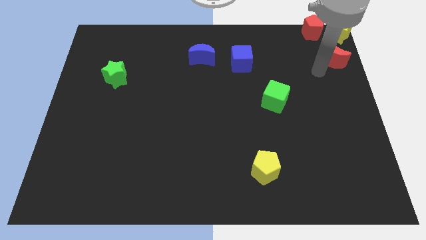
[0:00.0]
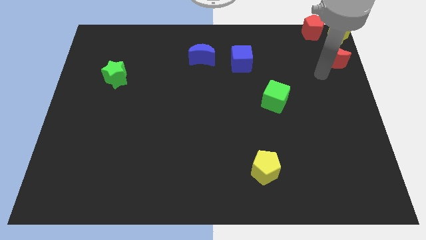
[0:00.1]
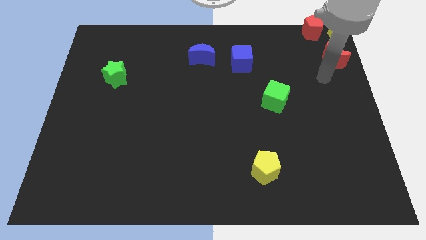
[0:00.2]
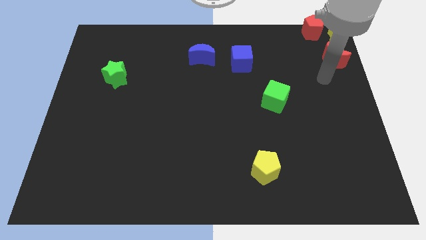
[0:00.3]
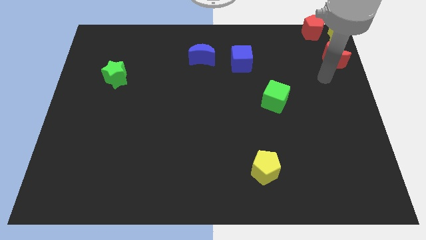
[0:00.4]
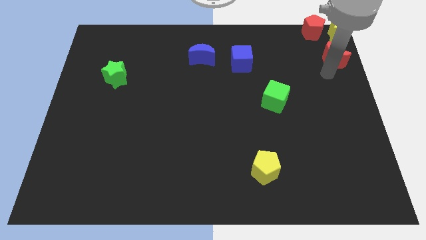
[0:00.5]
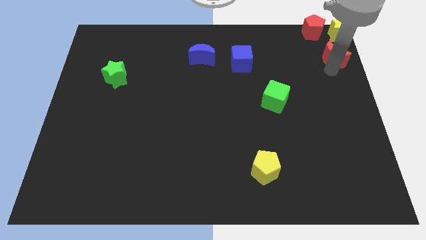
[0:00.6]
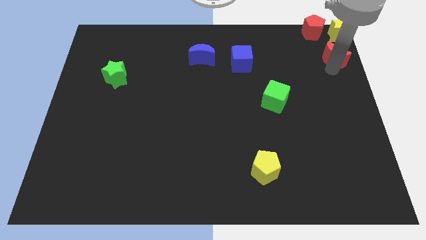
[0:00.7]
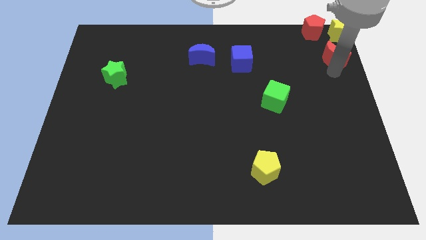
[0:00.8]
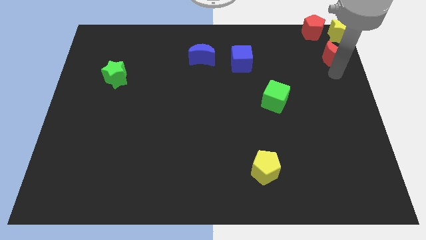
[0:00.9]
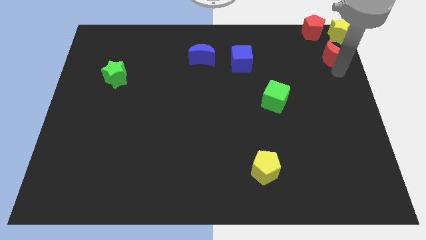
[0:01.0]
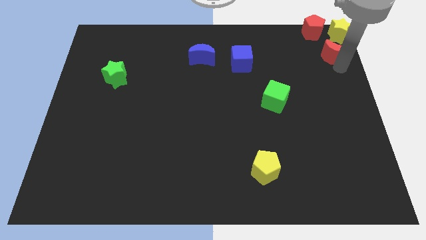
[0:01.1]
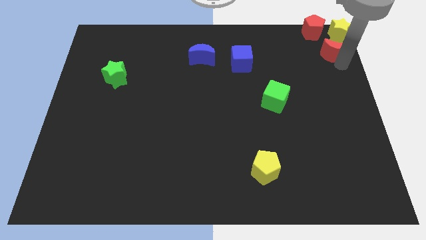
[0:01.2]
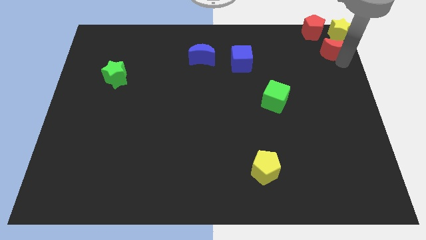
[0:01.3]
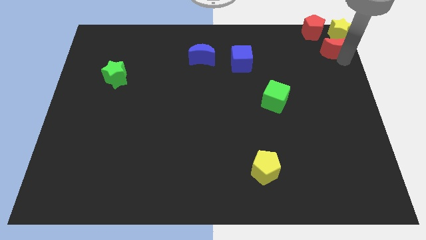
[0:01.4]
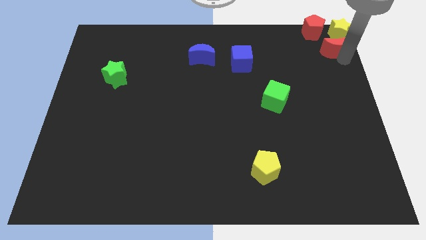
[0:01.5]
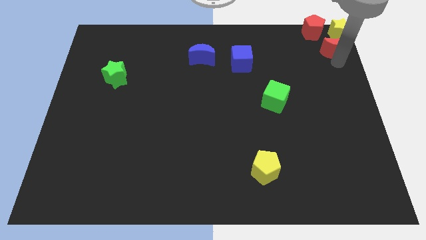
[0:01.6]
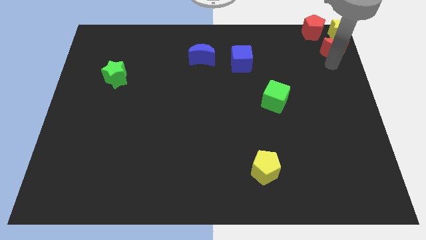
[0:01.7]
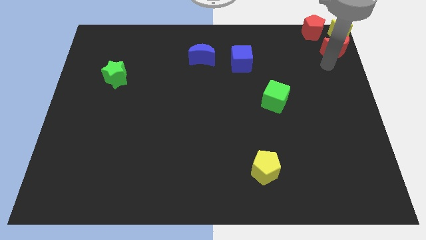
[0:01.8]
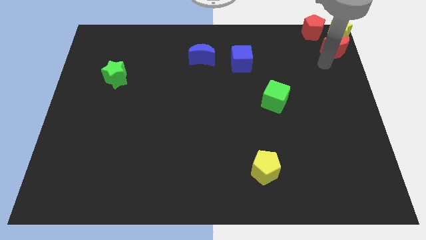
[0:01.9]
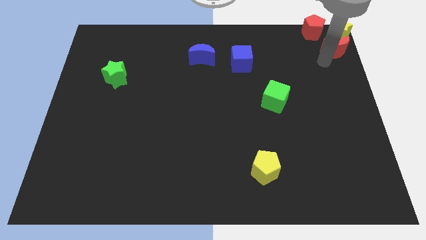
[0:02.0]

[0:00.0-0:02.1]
move red moon towards top right

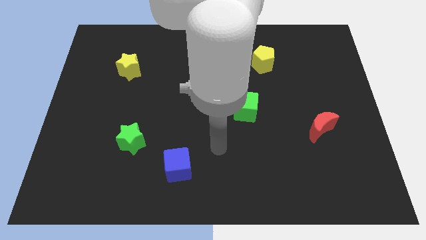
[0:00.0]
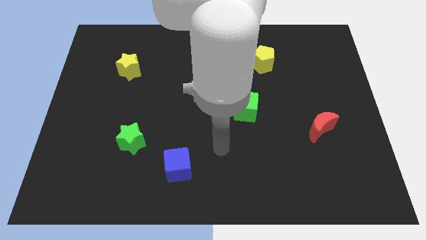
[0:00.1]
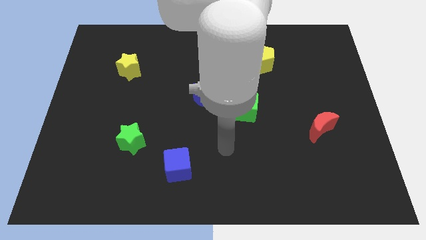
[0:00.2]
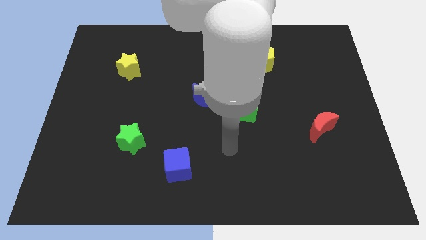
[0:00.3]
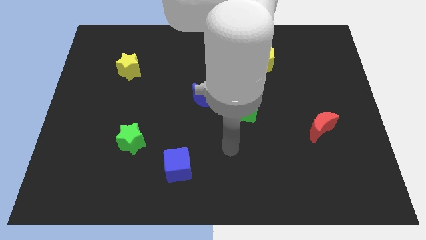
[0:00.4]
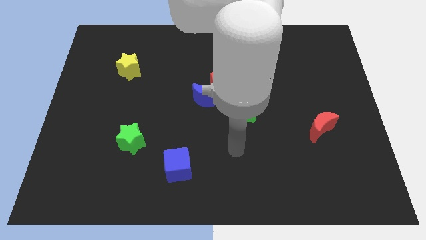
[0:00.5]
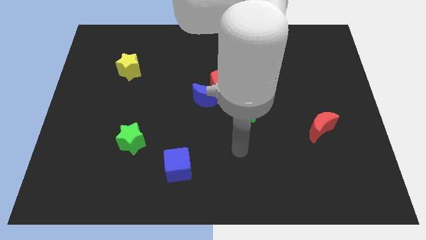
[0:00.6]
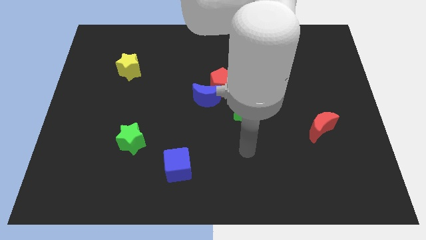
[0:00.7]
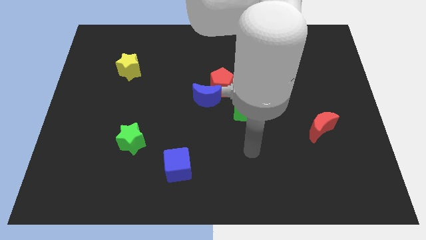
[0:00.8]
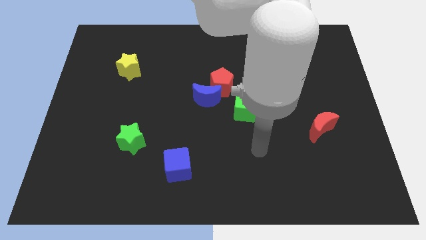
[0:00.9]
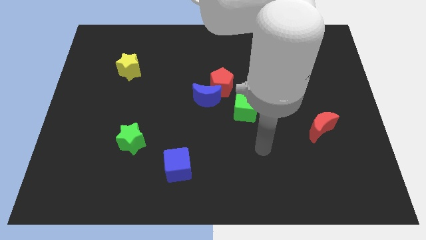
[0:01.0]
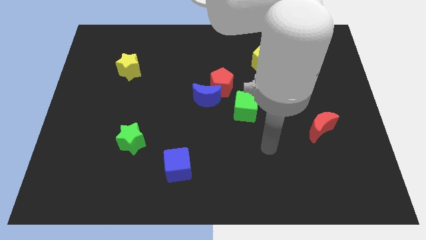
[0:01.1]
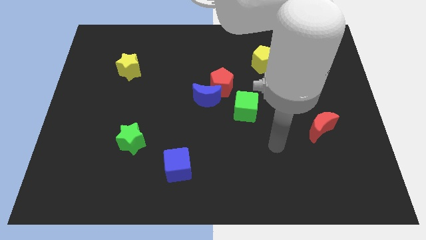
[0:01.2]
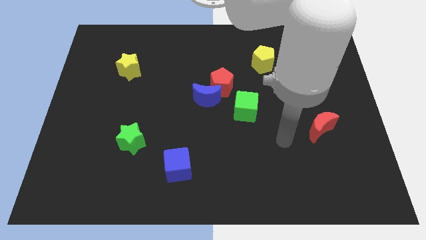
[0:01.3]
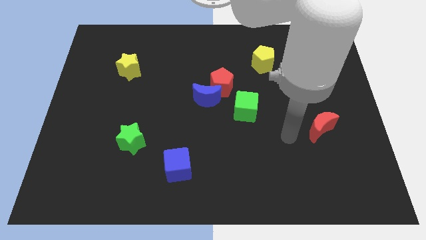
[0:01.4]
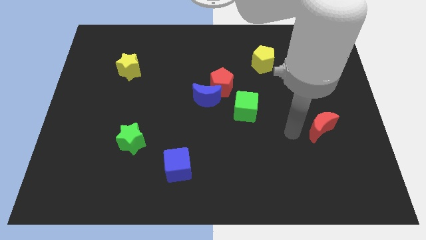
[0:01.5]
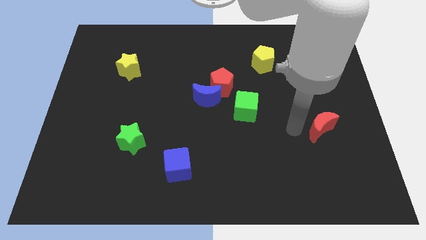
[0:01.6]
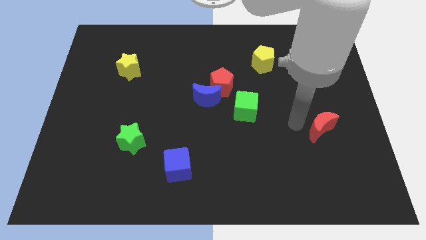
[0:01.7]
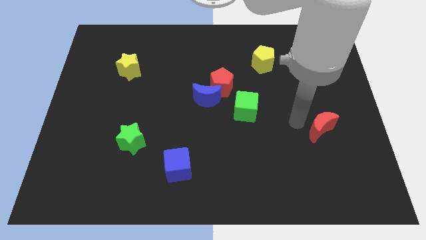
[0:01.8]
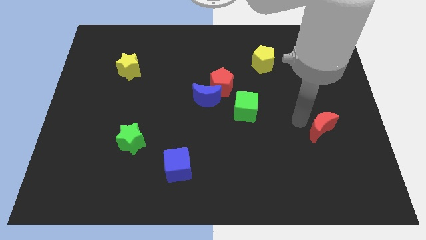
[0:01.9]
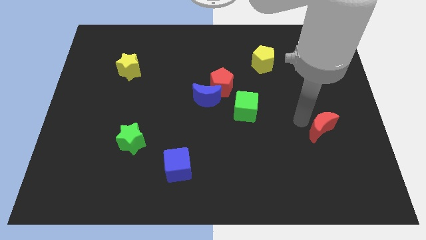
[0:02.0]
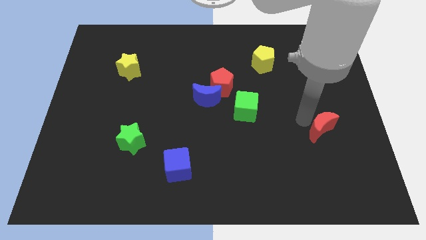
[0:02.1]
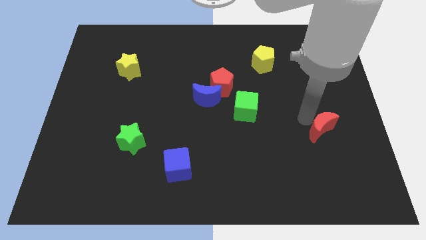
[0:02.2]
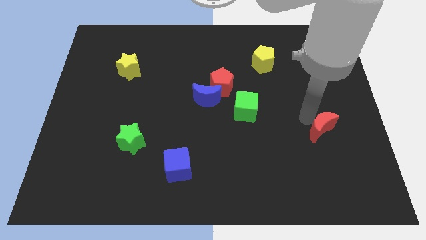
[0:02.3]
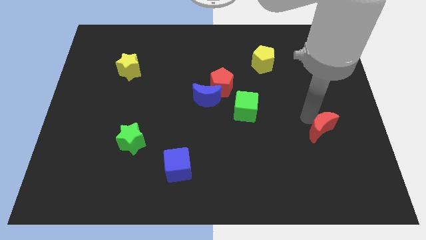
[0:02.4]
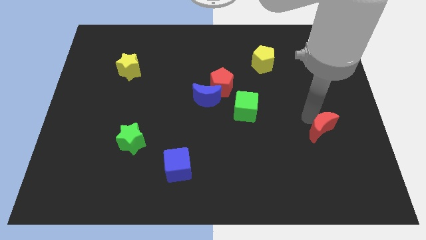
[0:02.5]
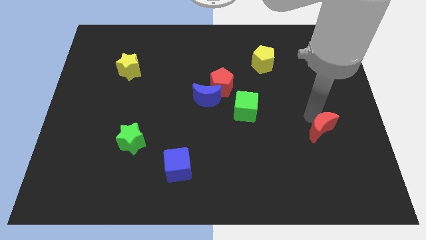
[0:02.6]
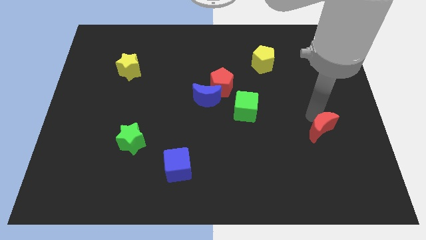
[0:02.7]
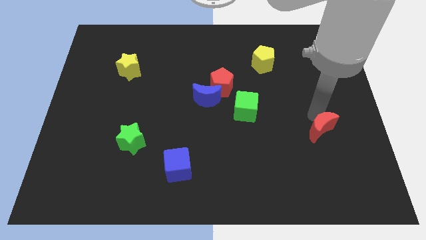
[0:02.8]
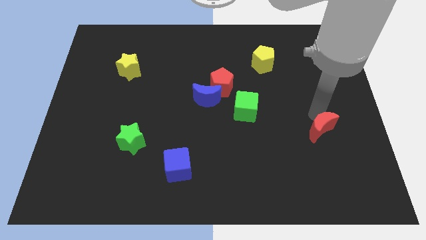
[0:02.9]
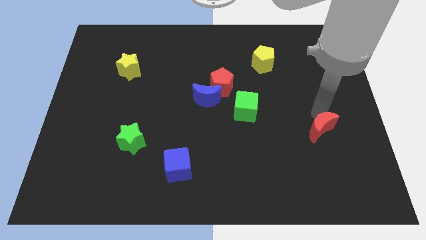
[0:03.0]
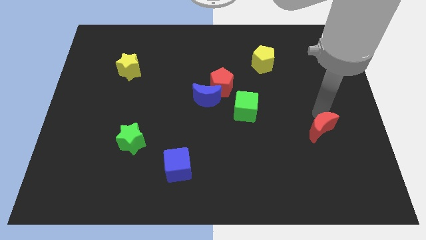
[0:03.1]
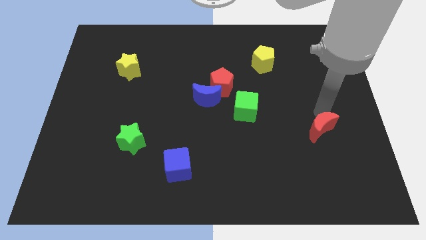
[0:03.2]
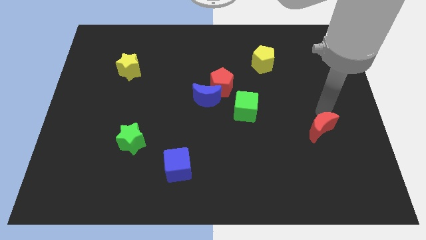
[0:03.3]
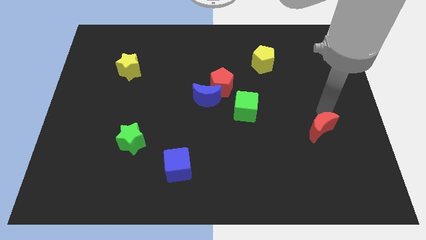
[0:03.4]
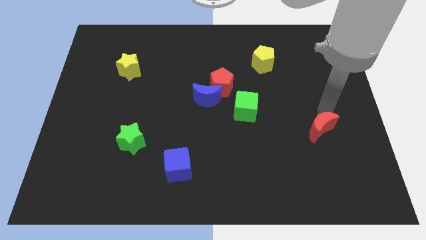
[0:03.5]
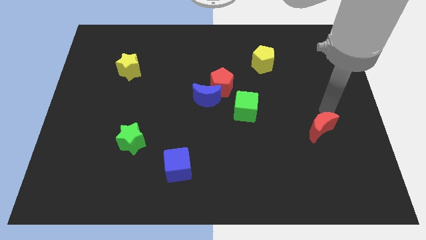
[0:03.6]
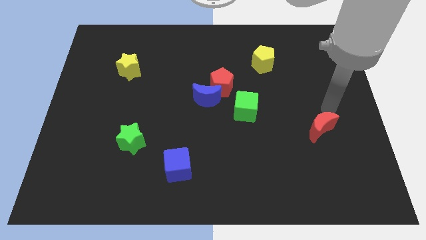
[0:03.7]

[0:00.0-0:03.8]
move your arm to right with out touching any object

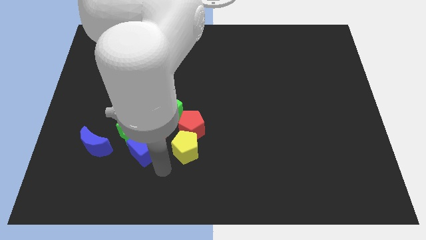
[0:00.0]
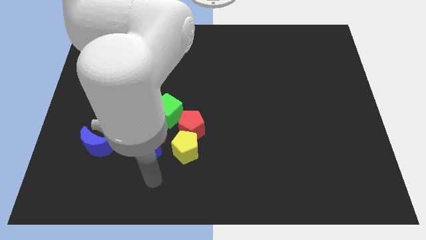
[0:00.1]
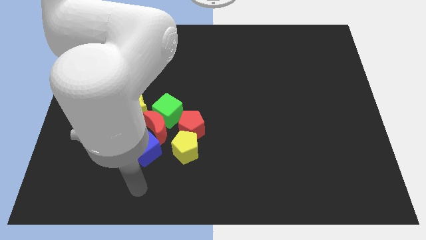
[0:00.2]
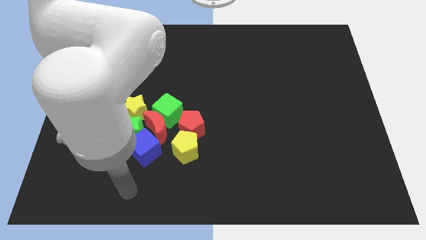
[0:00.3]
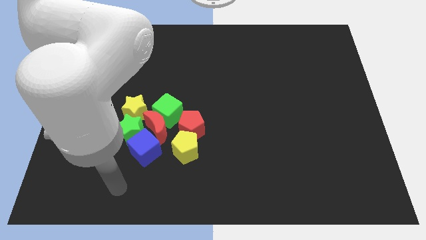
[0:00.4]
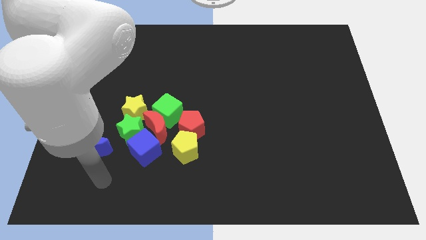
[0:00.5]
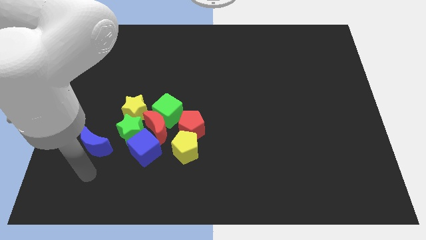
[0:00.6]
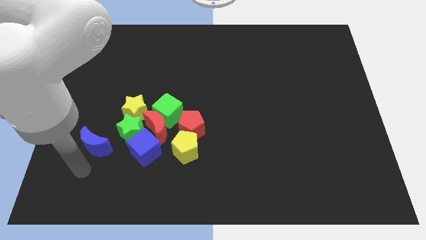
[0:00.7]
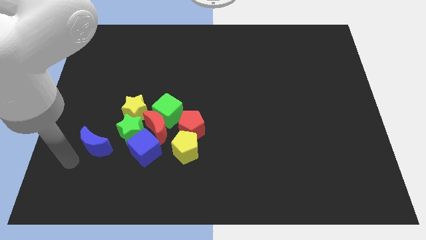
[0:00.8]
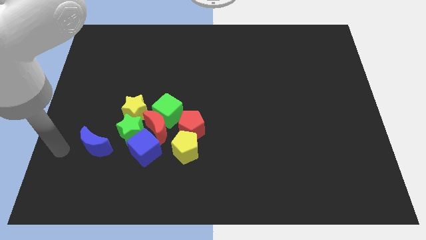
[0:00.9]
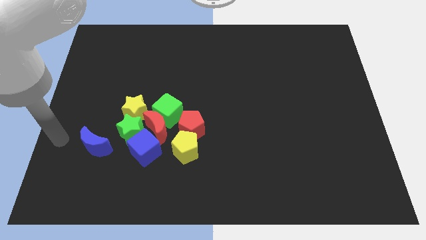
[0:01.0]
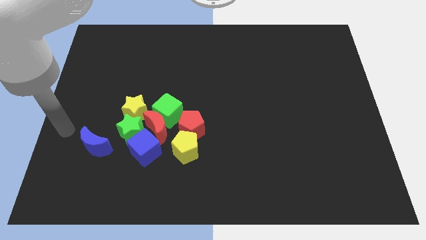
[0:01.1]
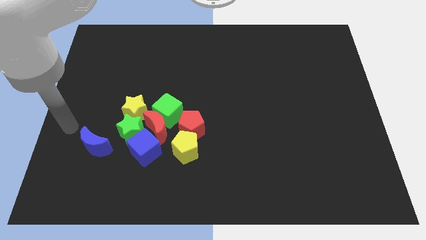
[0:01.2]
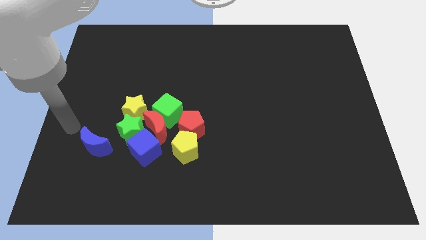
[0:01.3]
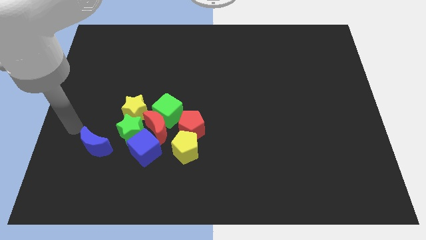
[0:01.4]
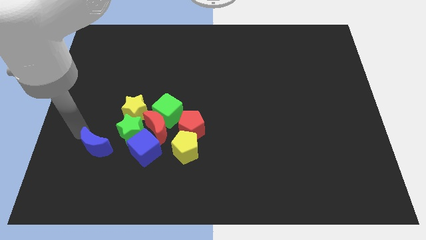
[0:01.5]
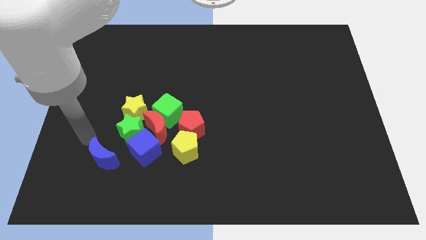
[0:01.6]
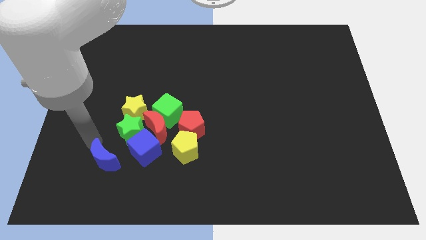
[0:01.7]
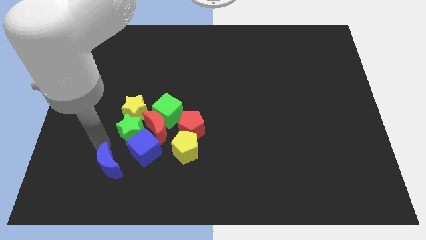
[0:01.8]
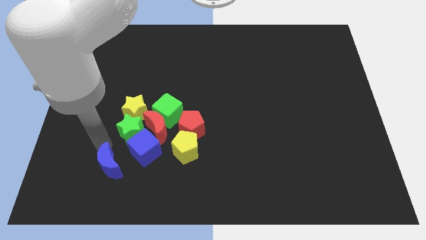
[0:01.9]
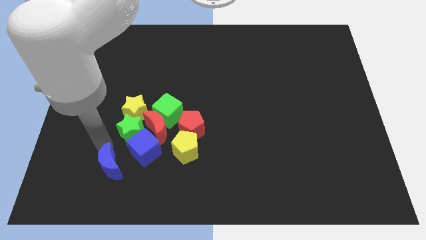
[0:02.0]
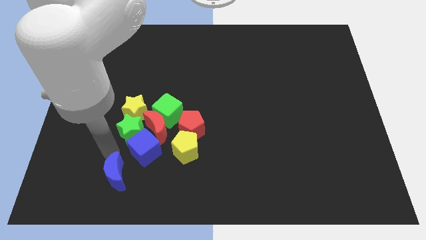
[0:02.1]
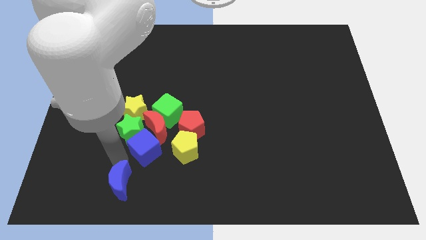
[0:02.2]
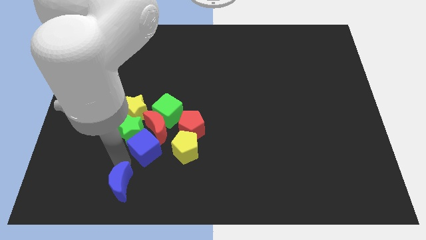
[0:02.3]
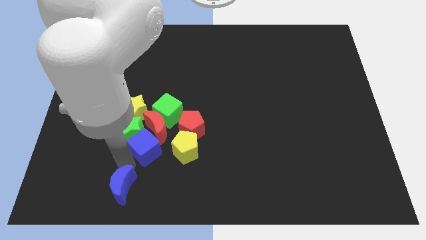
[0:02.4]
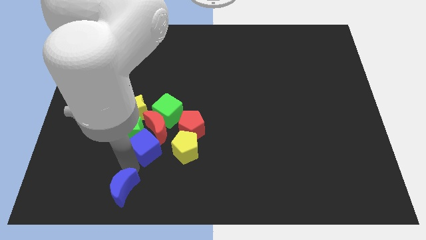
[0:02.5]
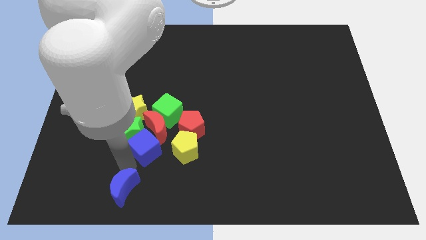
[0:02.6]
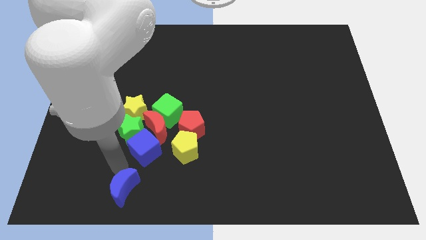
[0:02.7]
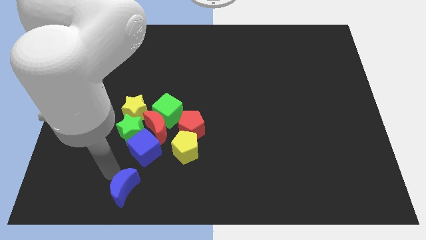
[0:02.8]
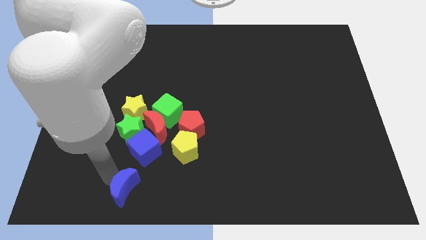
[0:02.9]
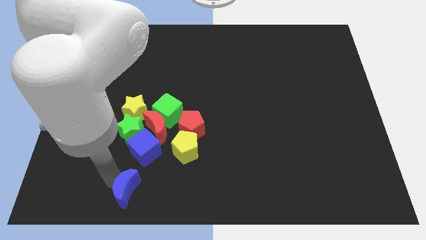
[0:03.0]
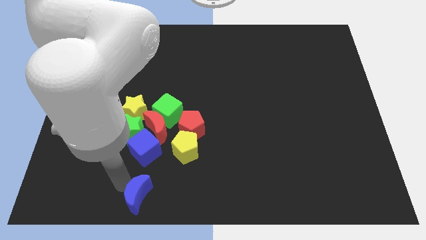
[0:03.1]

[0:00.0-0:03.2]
push the blue moon to the bottom side of the blue cube
